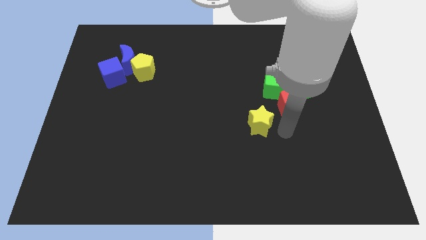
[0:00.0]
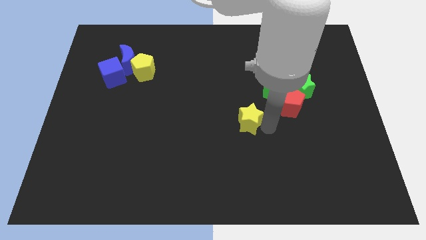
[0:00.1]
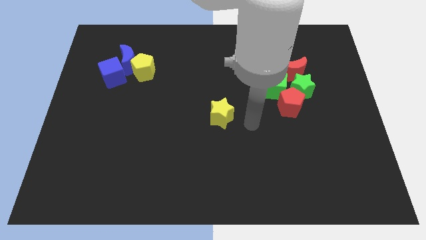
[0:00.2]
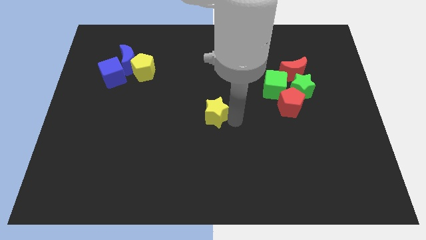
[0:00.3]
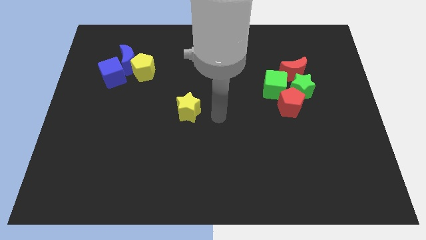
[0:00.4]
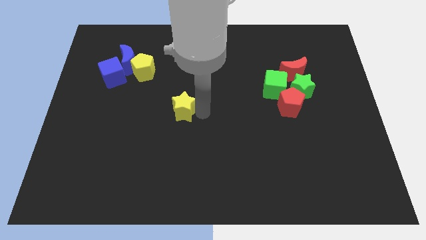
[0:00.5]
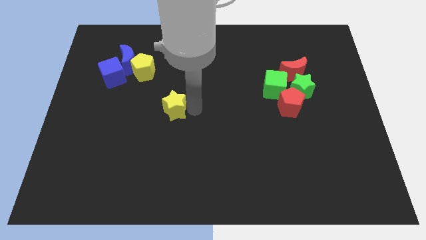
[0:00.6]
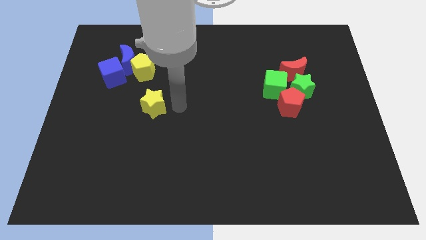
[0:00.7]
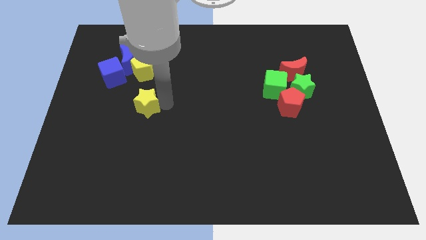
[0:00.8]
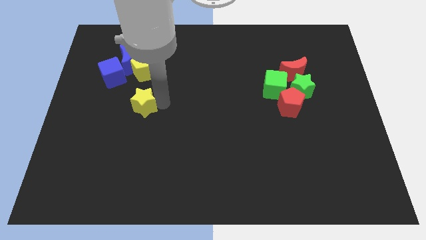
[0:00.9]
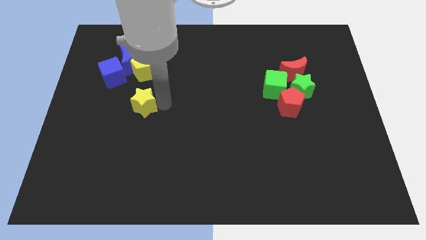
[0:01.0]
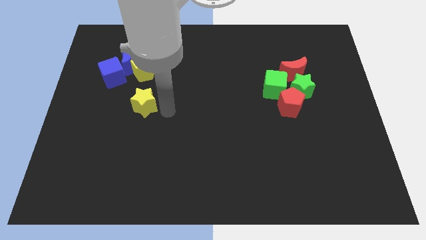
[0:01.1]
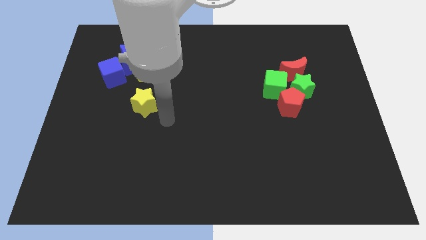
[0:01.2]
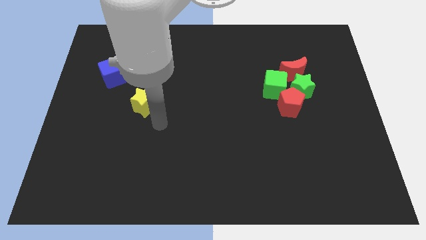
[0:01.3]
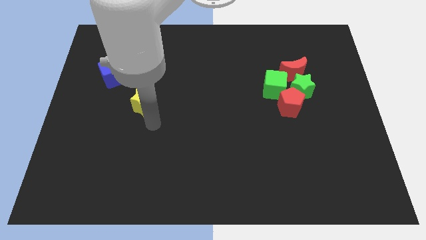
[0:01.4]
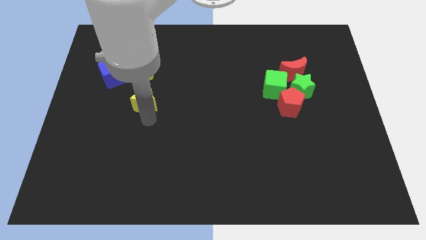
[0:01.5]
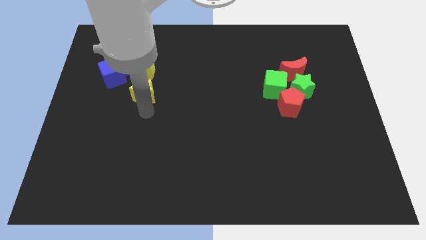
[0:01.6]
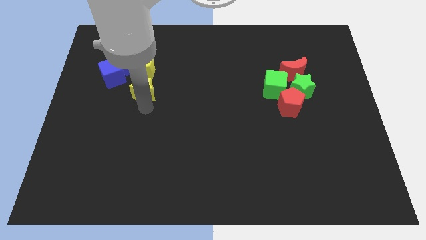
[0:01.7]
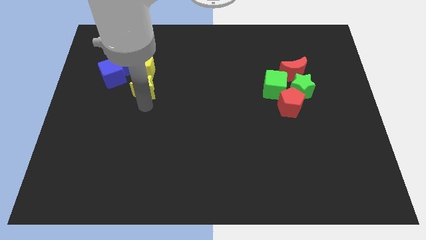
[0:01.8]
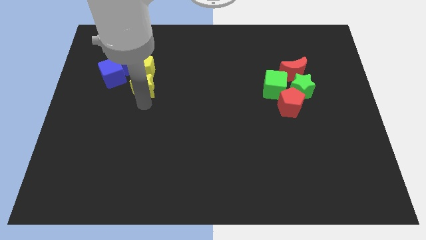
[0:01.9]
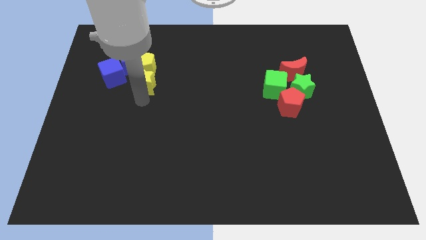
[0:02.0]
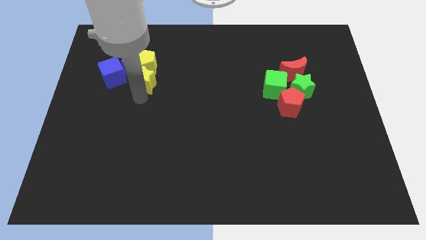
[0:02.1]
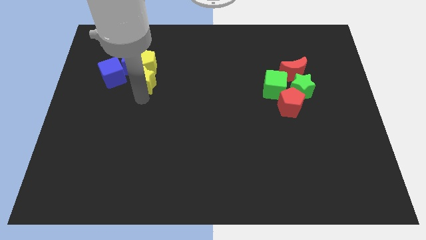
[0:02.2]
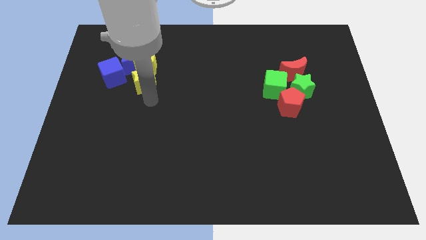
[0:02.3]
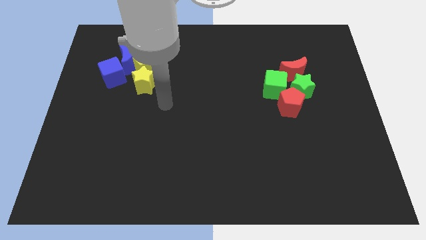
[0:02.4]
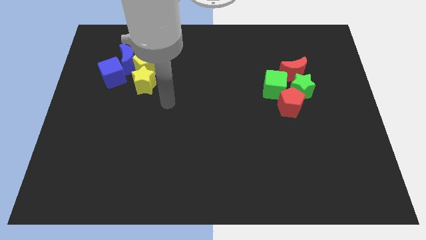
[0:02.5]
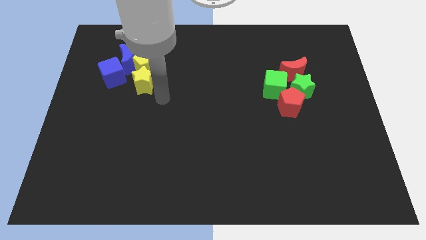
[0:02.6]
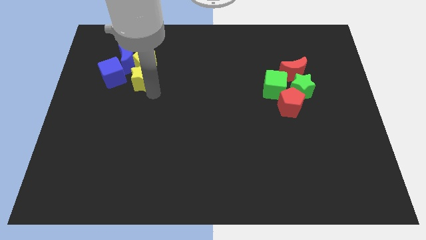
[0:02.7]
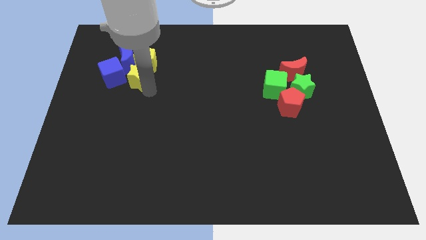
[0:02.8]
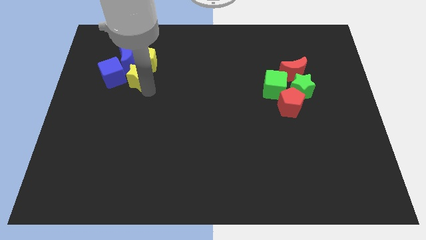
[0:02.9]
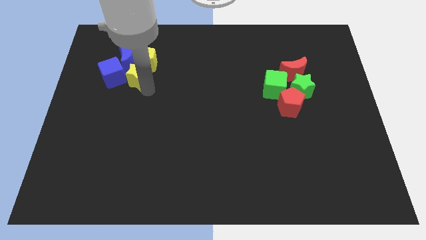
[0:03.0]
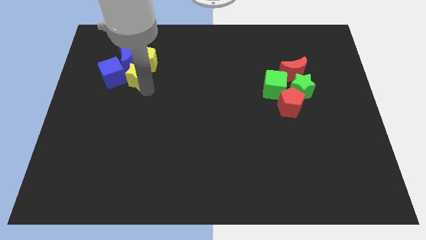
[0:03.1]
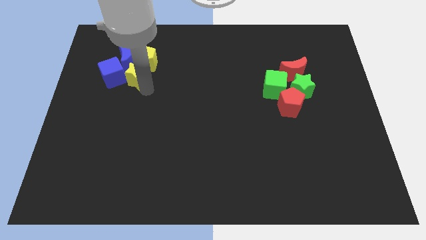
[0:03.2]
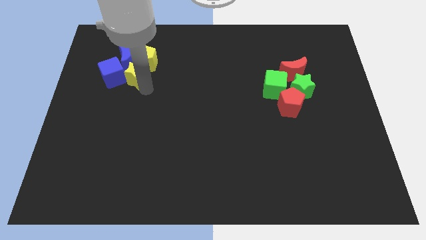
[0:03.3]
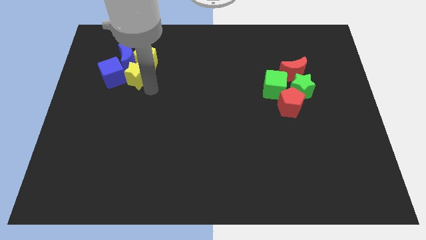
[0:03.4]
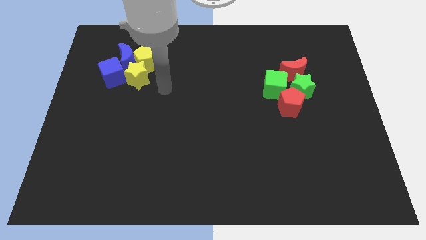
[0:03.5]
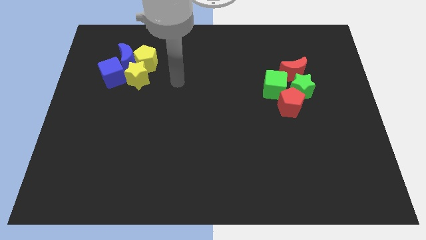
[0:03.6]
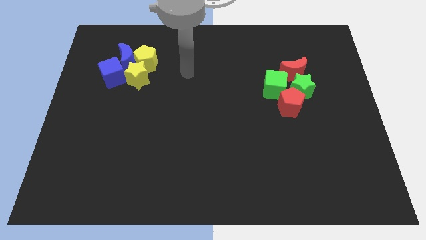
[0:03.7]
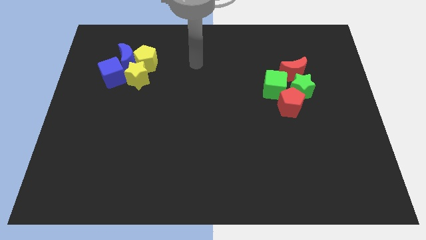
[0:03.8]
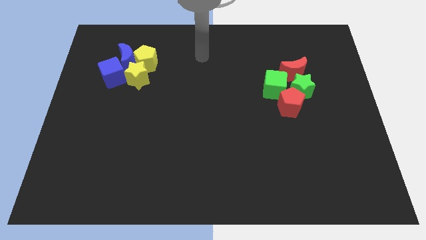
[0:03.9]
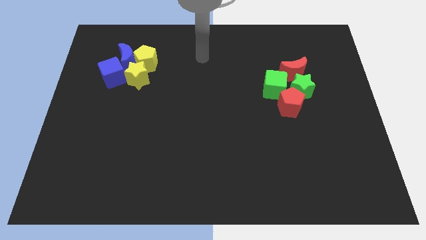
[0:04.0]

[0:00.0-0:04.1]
push the yellow star into the yellow pentagon and the blue blocks

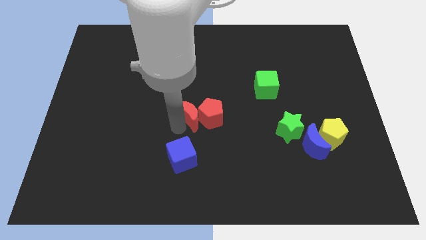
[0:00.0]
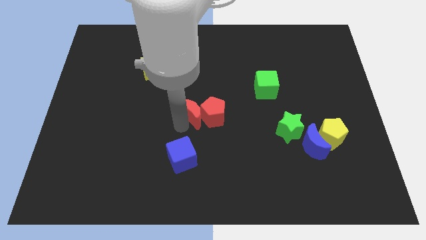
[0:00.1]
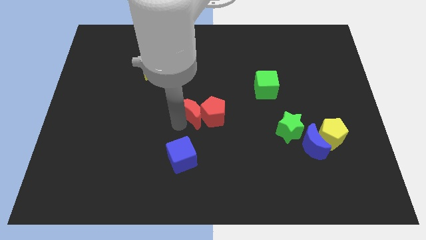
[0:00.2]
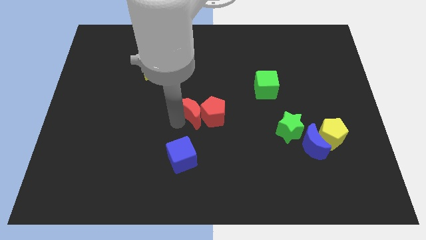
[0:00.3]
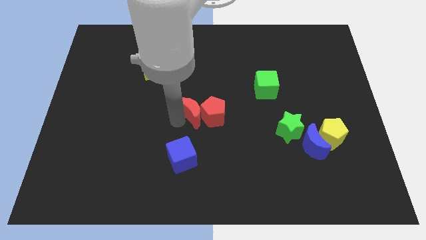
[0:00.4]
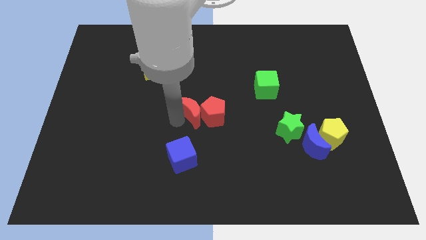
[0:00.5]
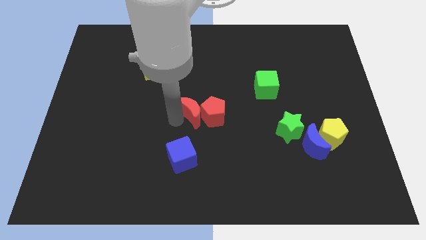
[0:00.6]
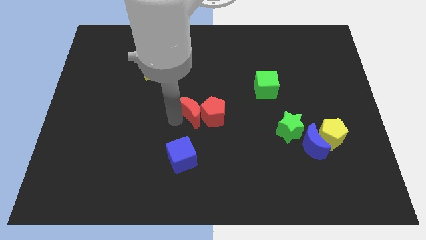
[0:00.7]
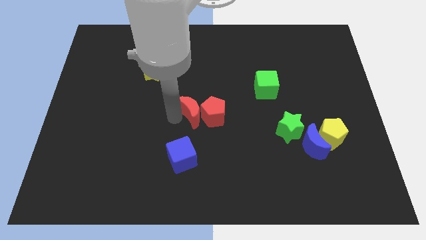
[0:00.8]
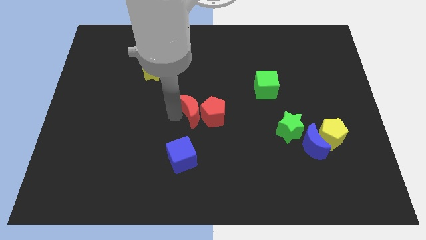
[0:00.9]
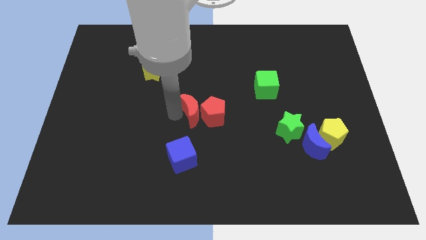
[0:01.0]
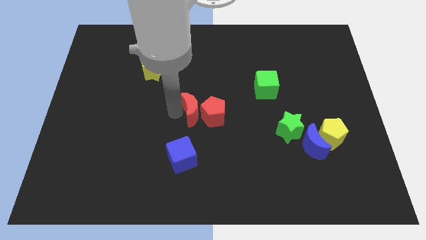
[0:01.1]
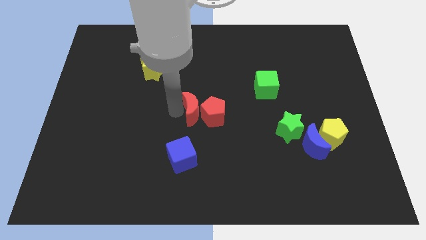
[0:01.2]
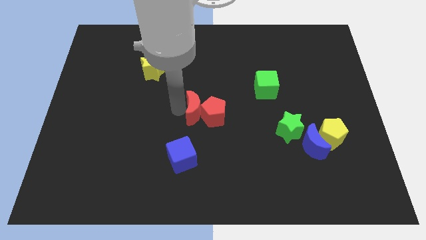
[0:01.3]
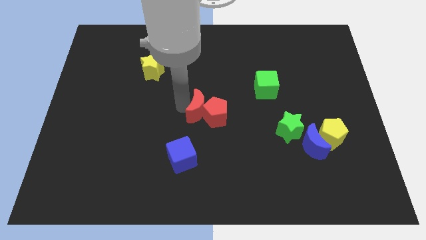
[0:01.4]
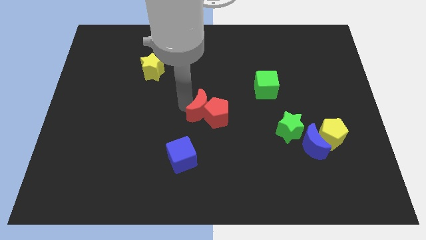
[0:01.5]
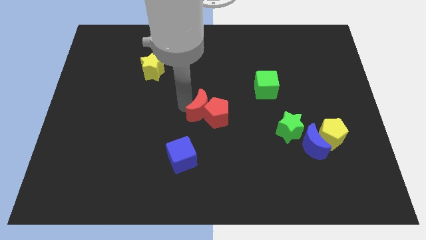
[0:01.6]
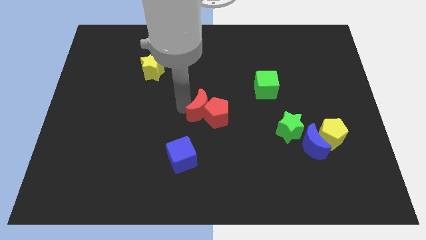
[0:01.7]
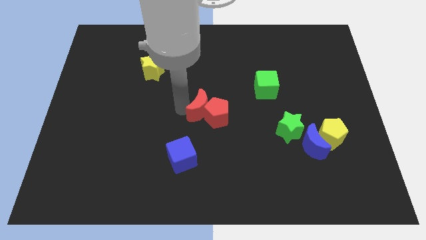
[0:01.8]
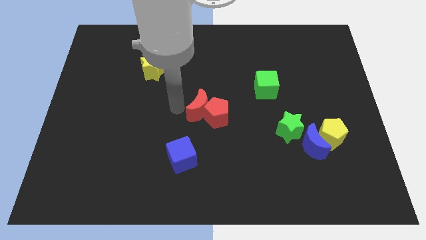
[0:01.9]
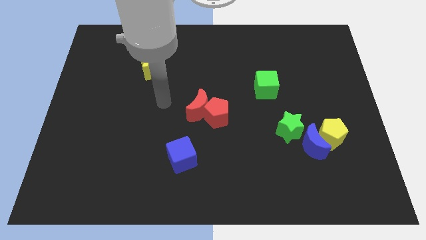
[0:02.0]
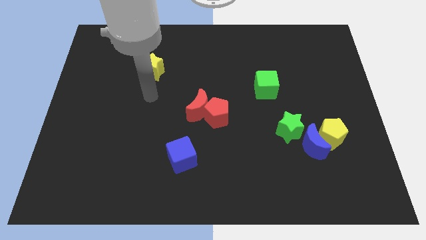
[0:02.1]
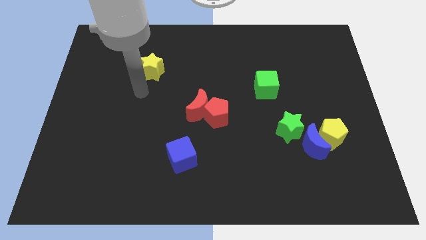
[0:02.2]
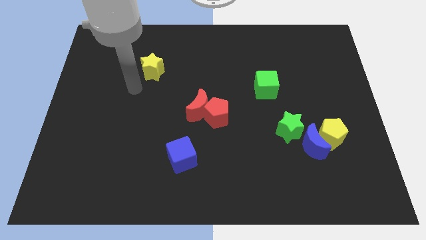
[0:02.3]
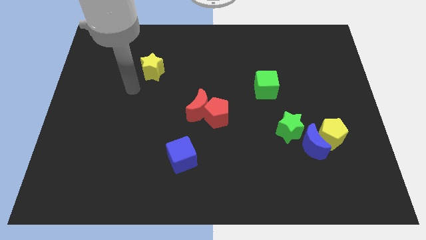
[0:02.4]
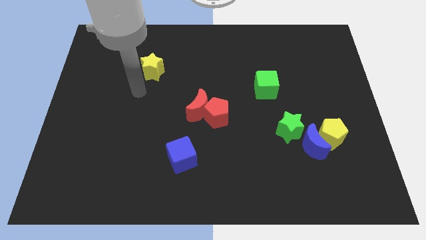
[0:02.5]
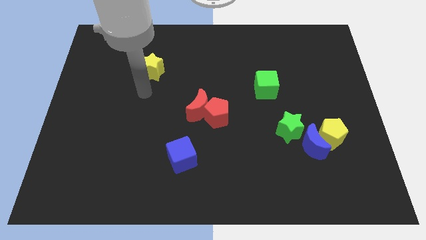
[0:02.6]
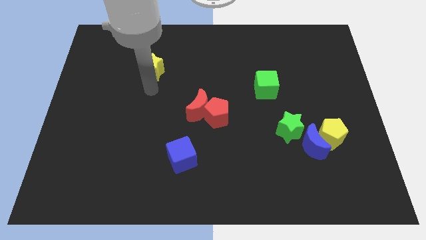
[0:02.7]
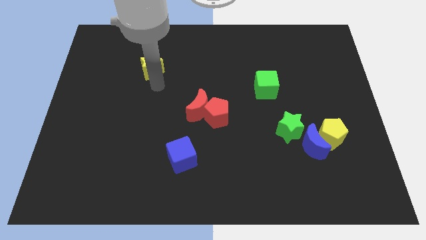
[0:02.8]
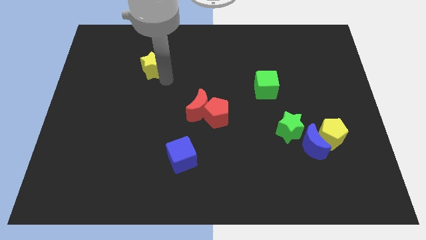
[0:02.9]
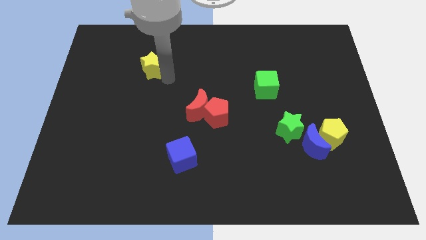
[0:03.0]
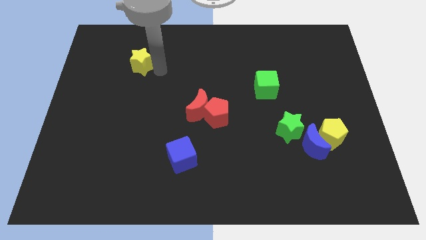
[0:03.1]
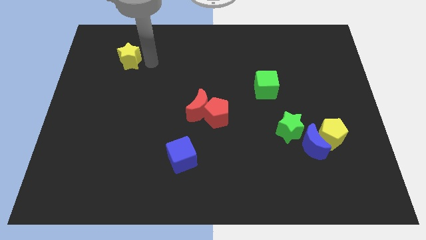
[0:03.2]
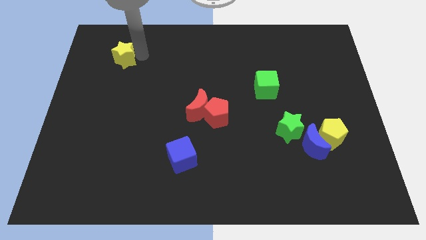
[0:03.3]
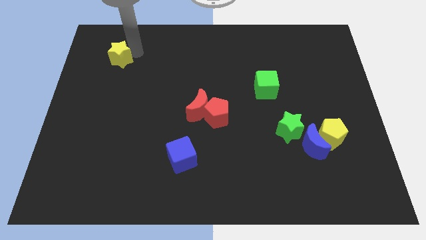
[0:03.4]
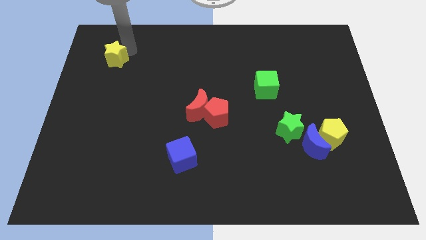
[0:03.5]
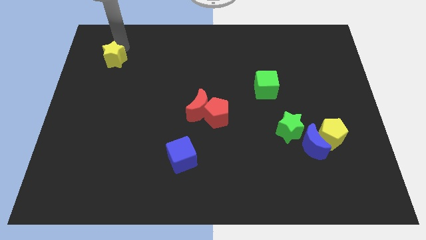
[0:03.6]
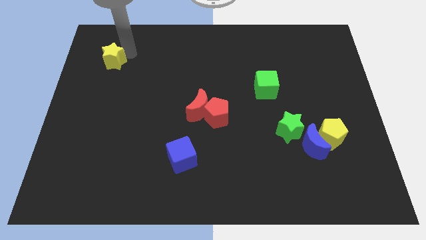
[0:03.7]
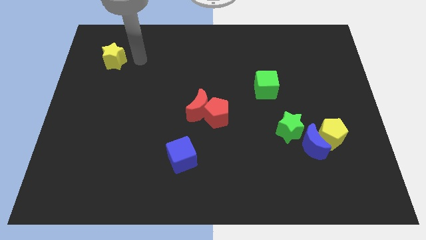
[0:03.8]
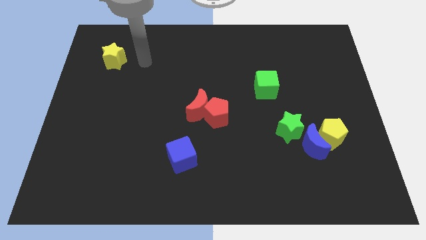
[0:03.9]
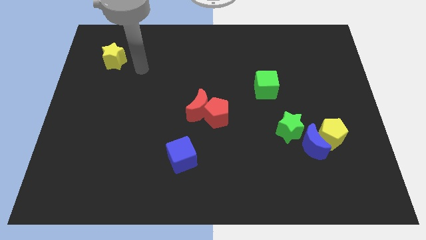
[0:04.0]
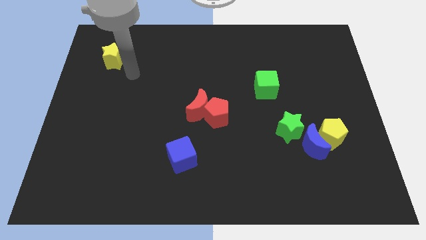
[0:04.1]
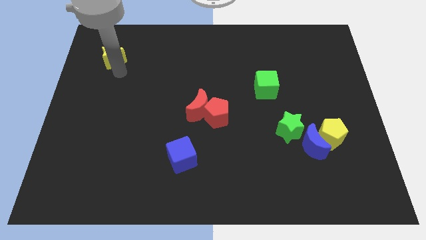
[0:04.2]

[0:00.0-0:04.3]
push the yellow star towards the top left of the board

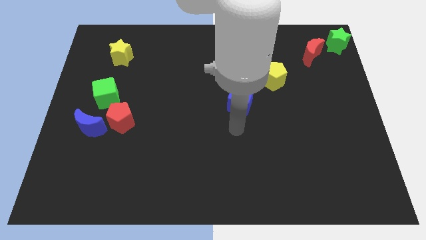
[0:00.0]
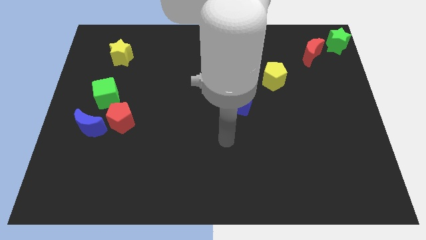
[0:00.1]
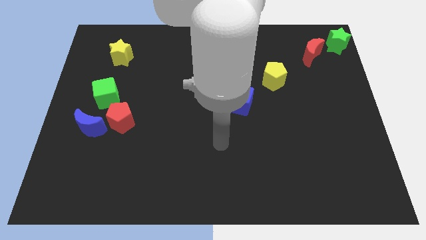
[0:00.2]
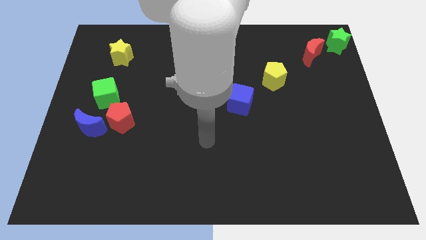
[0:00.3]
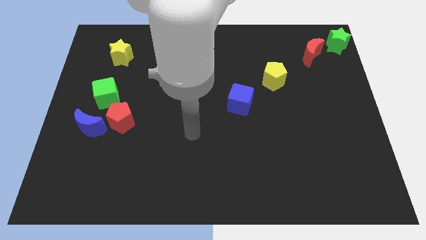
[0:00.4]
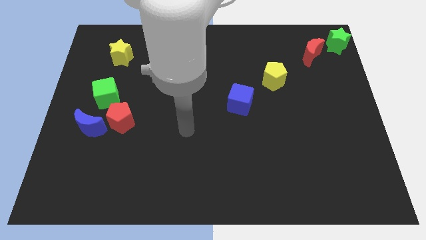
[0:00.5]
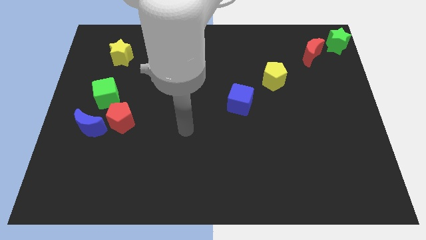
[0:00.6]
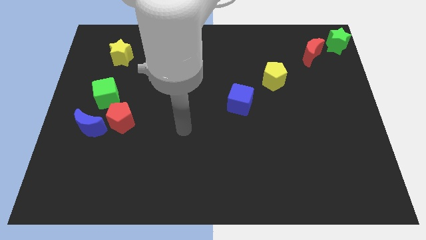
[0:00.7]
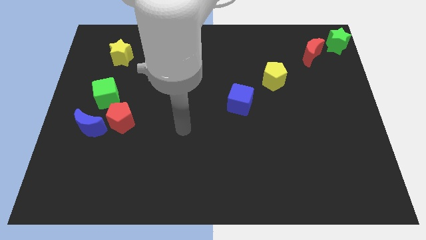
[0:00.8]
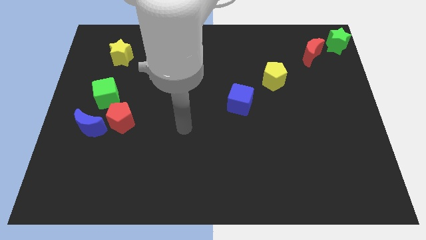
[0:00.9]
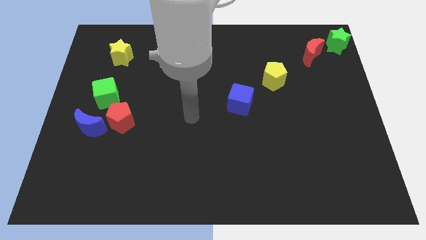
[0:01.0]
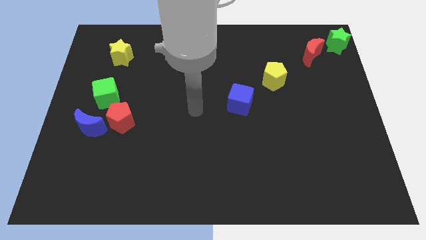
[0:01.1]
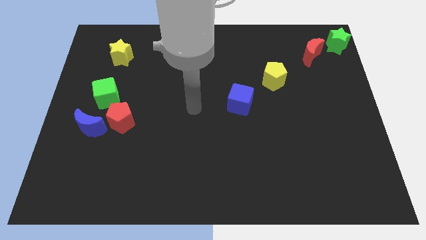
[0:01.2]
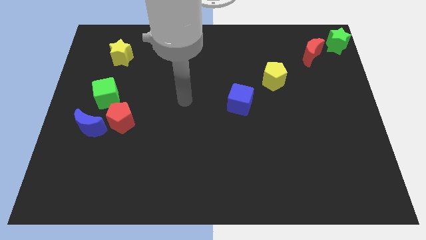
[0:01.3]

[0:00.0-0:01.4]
place your arm in between the blue cube and red pentagon
